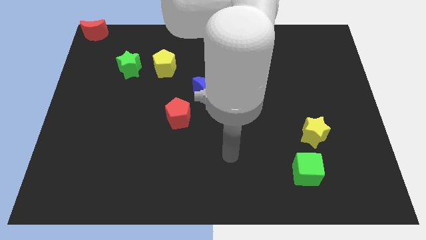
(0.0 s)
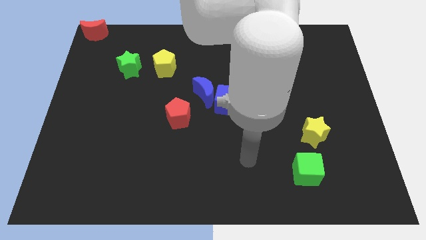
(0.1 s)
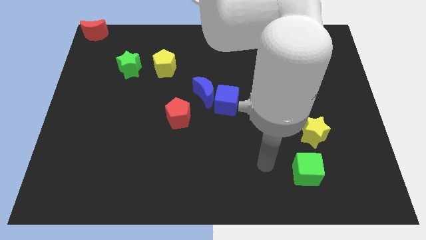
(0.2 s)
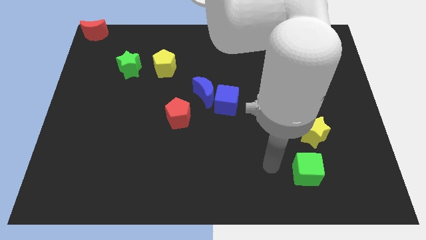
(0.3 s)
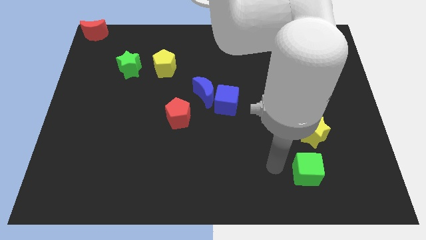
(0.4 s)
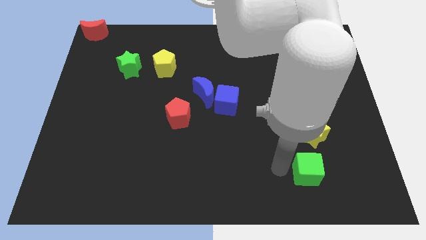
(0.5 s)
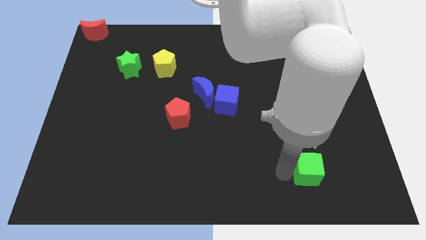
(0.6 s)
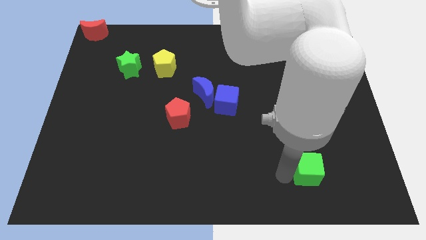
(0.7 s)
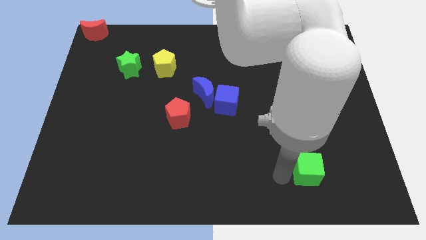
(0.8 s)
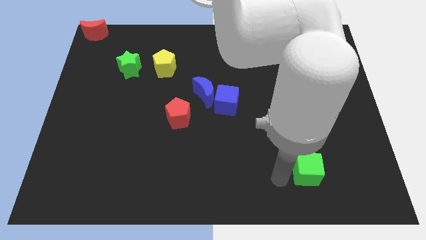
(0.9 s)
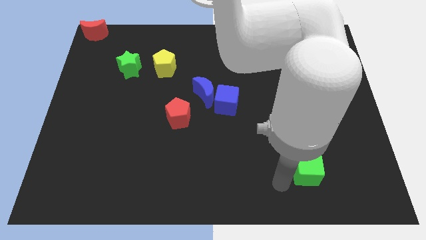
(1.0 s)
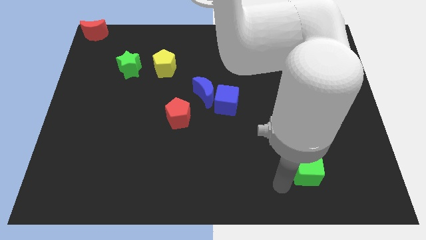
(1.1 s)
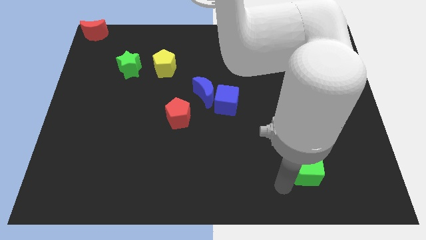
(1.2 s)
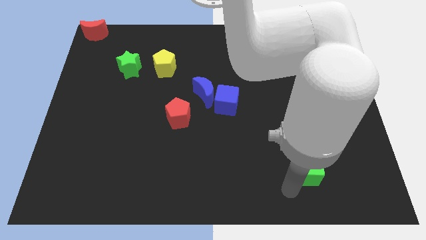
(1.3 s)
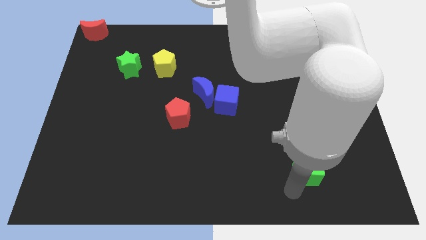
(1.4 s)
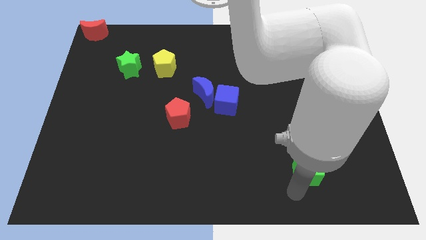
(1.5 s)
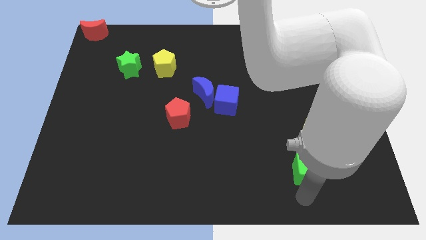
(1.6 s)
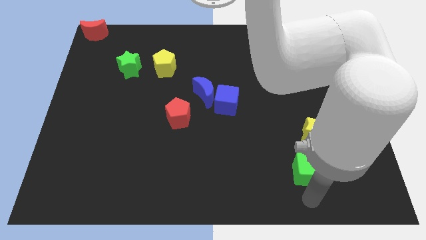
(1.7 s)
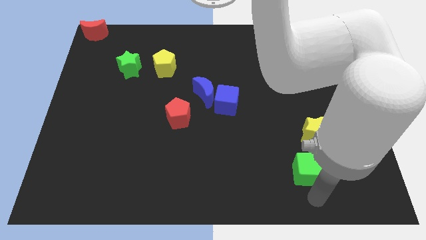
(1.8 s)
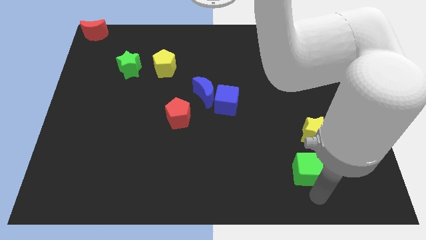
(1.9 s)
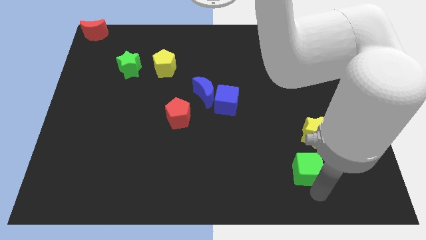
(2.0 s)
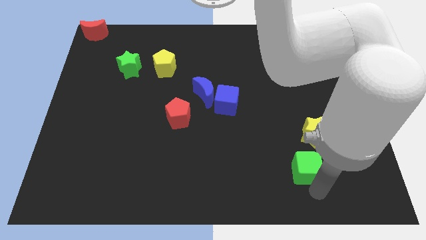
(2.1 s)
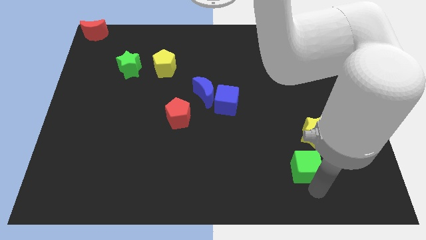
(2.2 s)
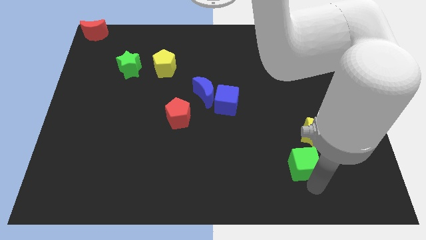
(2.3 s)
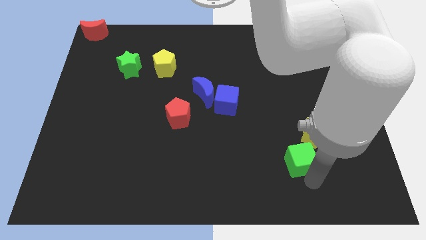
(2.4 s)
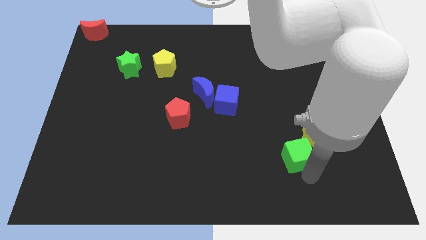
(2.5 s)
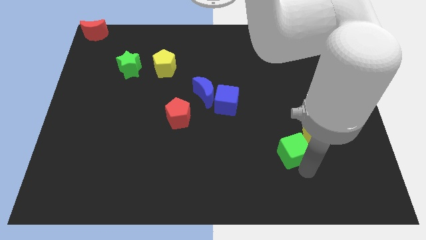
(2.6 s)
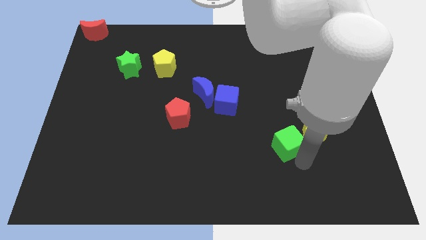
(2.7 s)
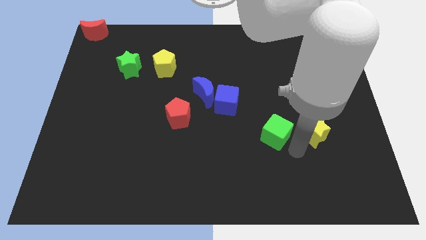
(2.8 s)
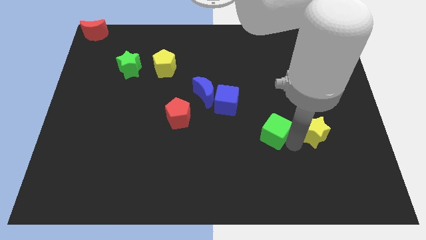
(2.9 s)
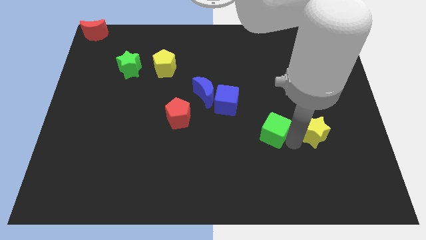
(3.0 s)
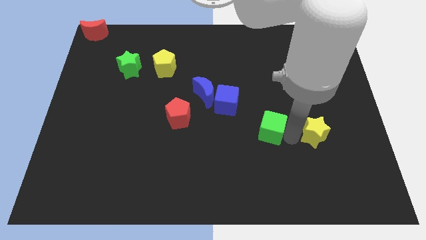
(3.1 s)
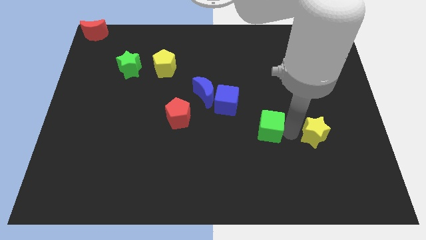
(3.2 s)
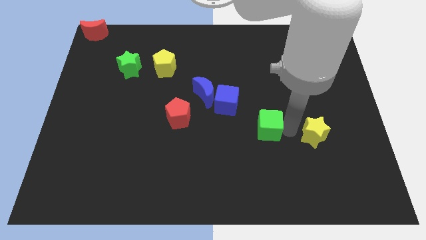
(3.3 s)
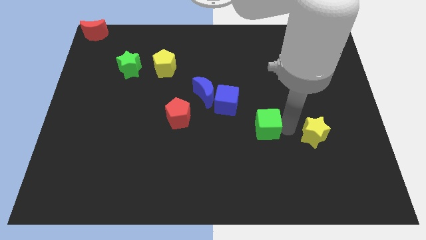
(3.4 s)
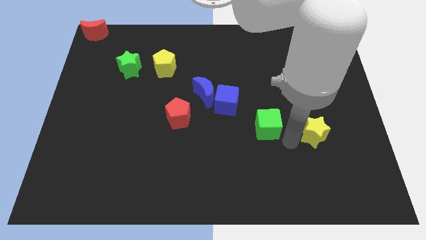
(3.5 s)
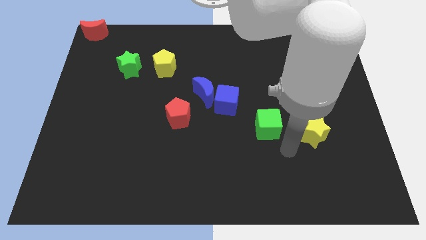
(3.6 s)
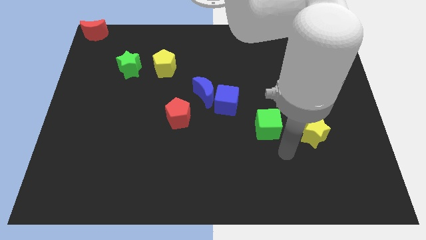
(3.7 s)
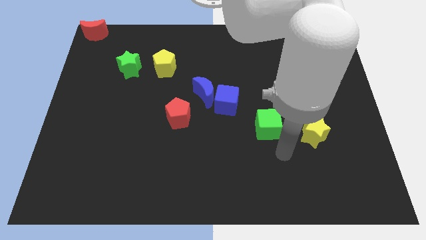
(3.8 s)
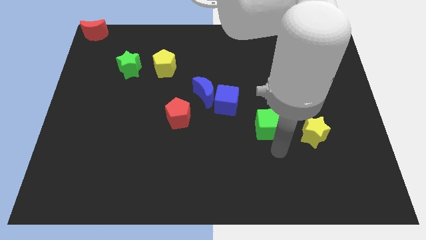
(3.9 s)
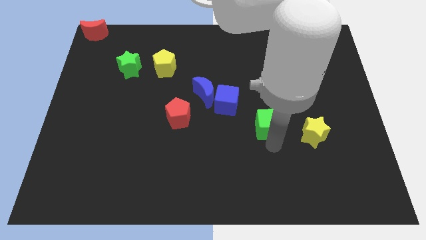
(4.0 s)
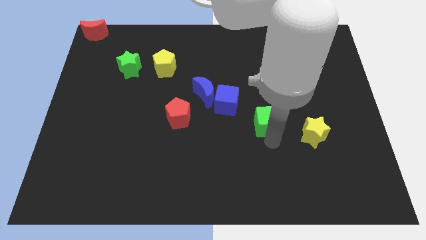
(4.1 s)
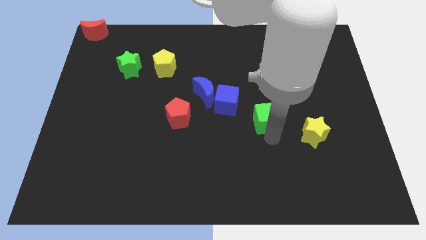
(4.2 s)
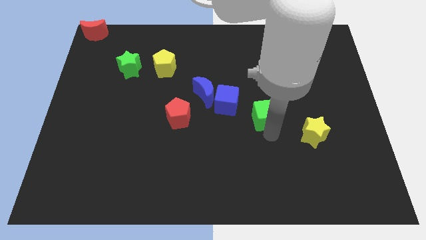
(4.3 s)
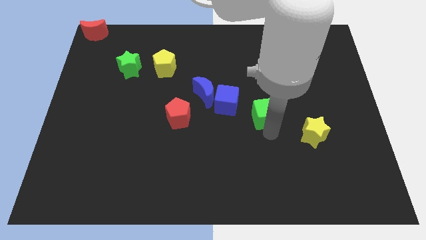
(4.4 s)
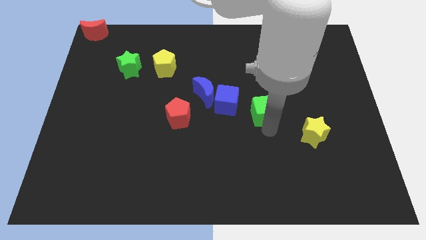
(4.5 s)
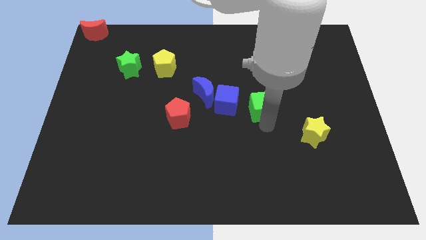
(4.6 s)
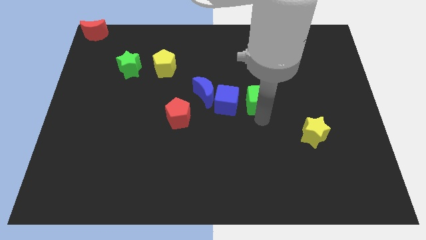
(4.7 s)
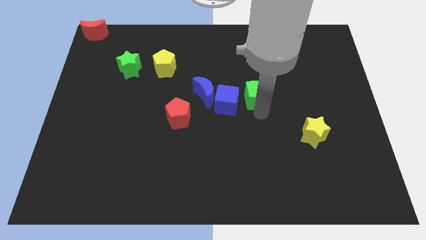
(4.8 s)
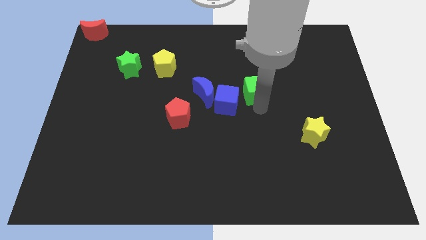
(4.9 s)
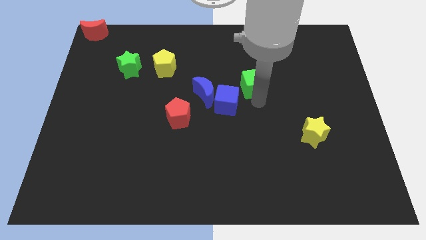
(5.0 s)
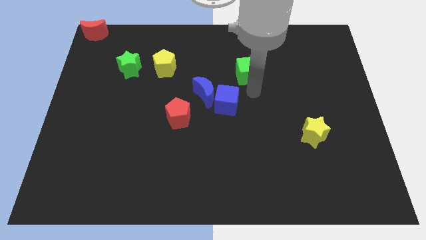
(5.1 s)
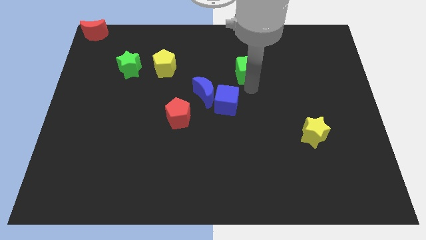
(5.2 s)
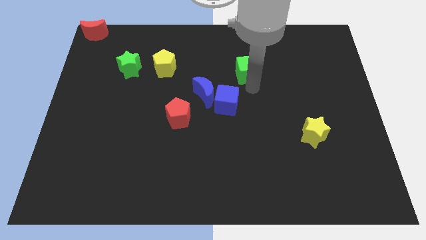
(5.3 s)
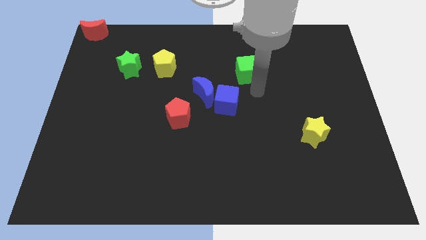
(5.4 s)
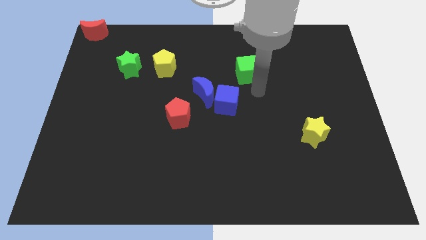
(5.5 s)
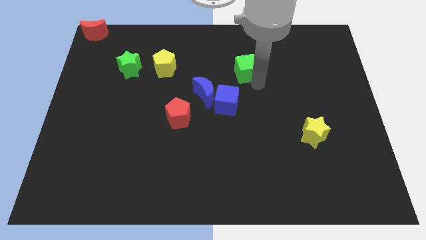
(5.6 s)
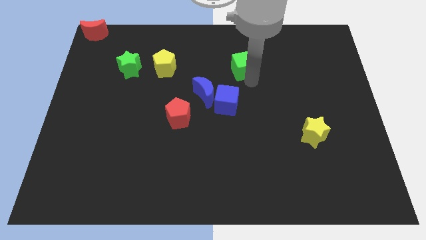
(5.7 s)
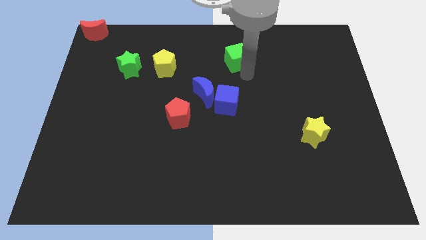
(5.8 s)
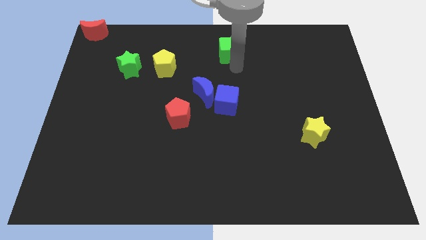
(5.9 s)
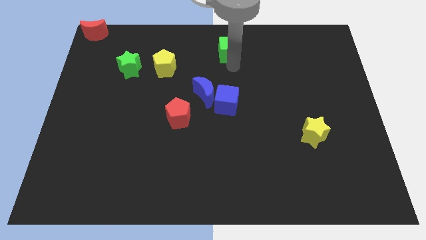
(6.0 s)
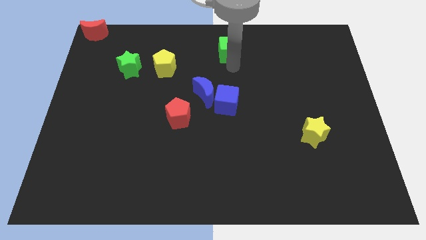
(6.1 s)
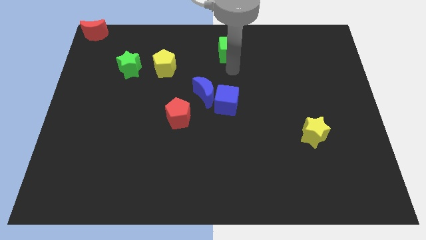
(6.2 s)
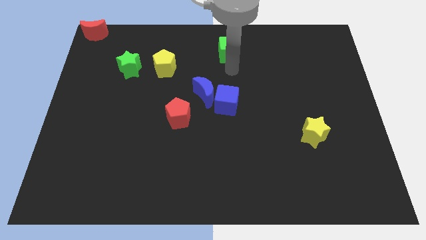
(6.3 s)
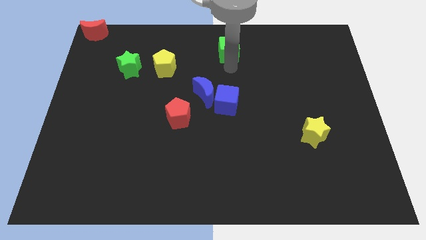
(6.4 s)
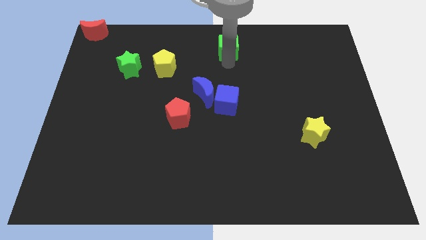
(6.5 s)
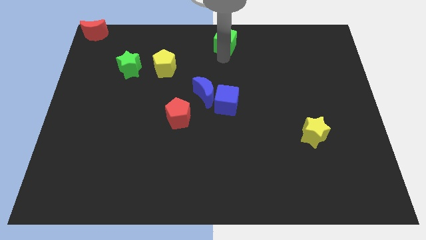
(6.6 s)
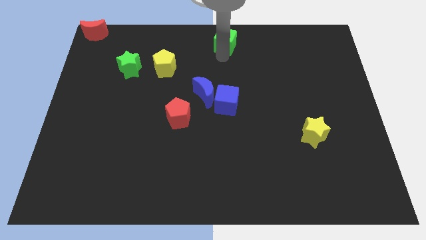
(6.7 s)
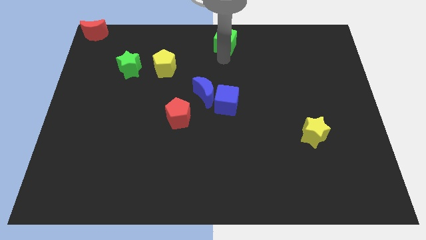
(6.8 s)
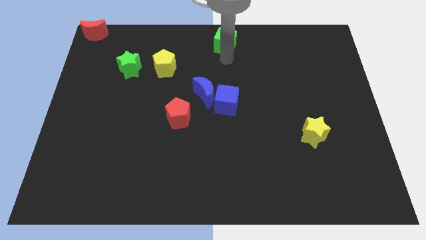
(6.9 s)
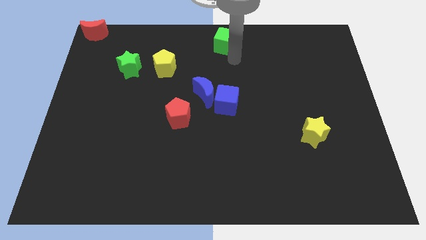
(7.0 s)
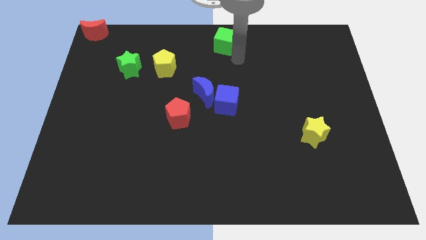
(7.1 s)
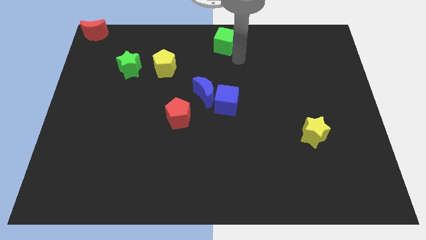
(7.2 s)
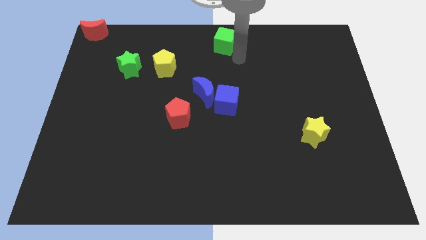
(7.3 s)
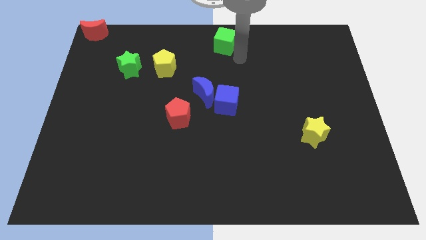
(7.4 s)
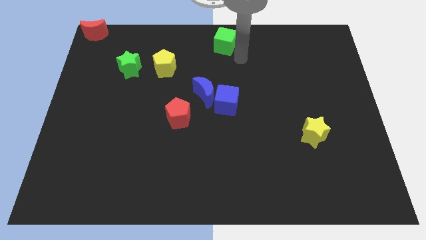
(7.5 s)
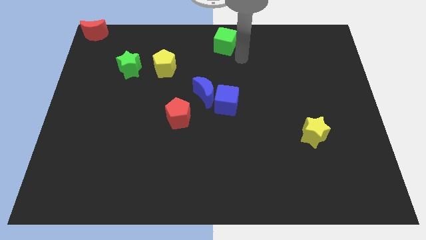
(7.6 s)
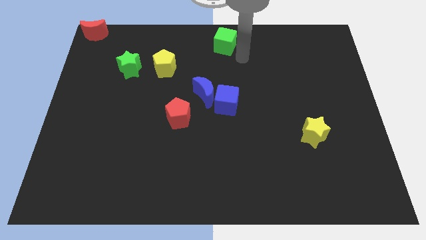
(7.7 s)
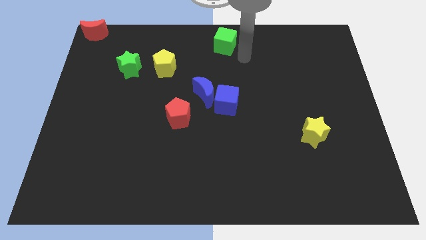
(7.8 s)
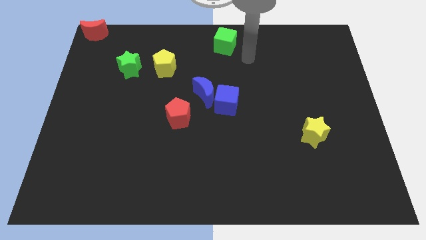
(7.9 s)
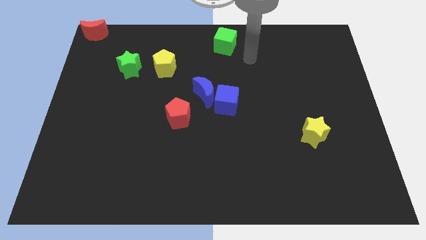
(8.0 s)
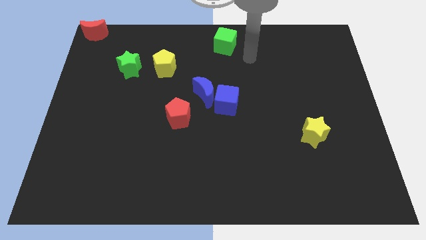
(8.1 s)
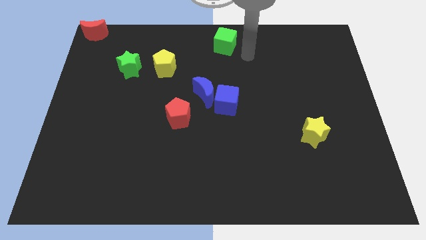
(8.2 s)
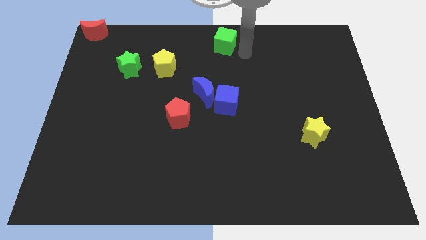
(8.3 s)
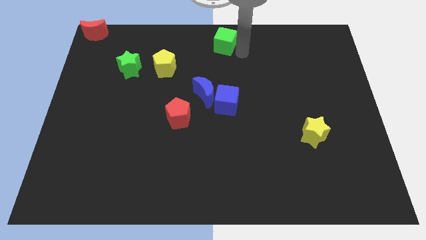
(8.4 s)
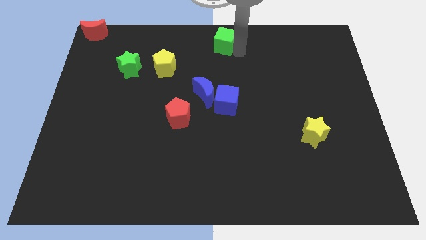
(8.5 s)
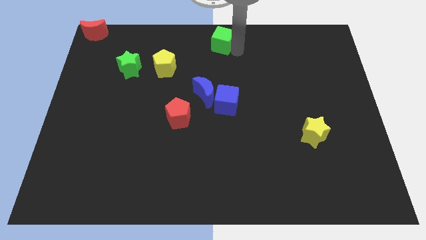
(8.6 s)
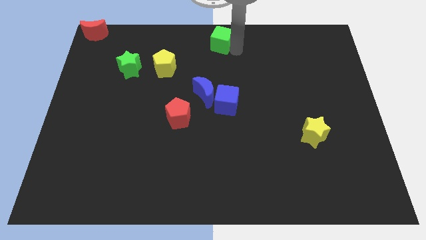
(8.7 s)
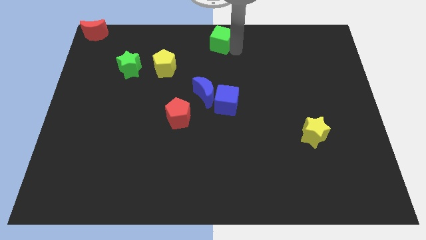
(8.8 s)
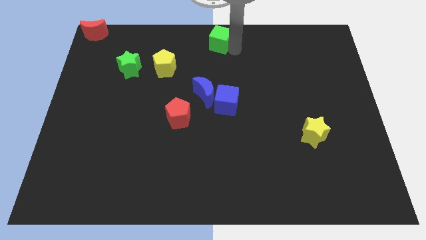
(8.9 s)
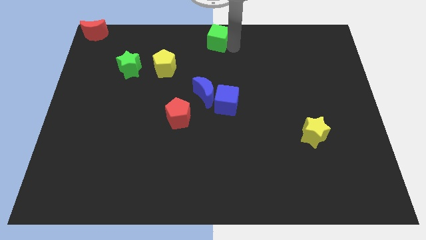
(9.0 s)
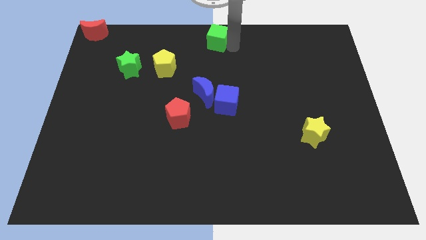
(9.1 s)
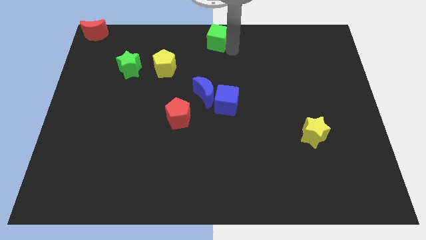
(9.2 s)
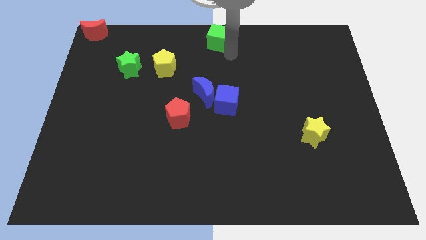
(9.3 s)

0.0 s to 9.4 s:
move the green cube to the top center of the board
